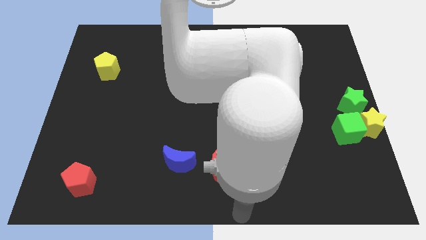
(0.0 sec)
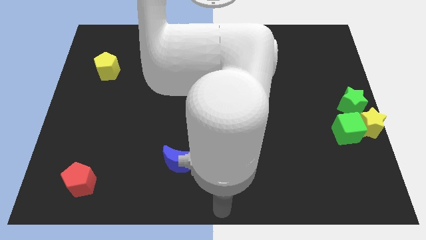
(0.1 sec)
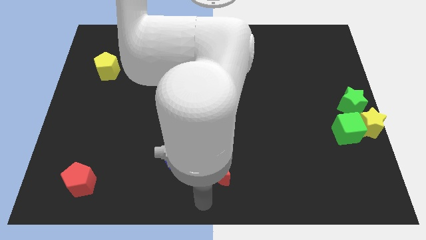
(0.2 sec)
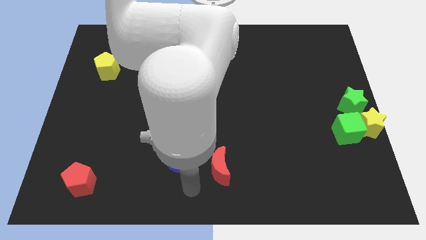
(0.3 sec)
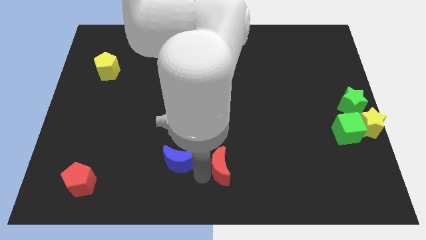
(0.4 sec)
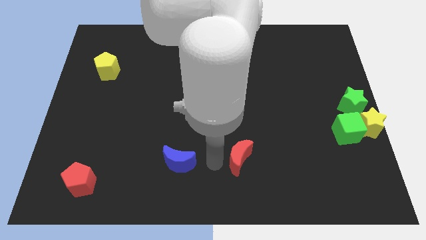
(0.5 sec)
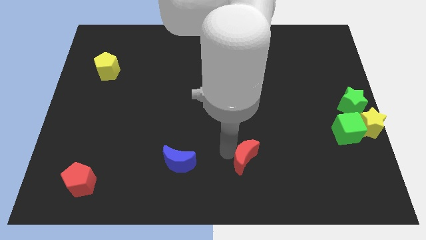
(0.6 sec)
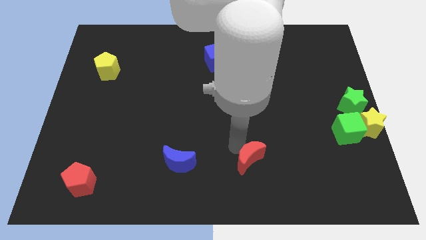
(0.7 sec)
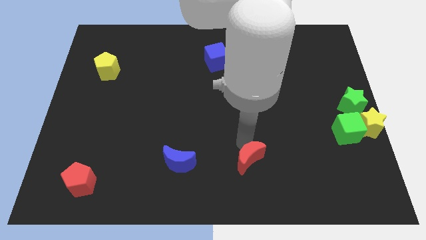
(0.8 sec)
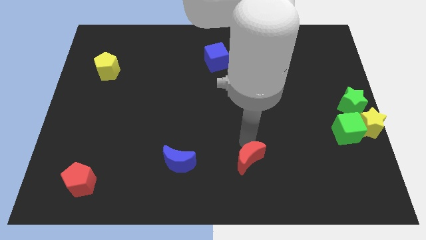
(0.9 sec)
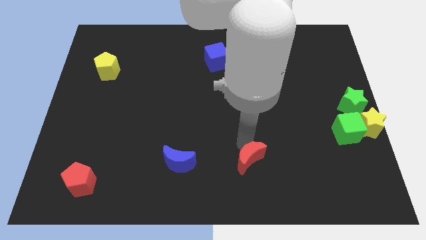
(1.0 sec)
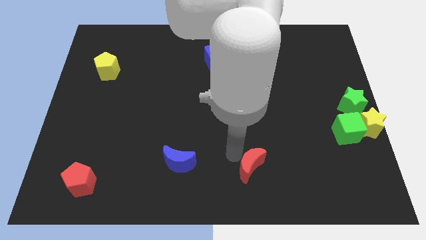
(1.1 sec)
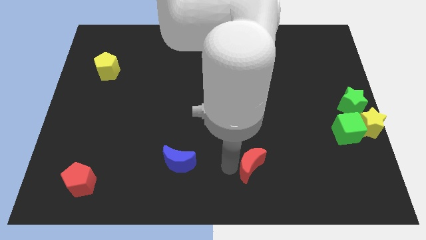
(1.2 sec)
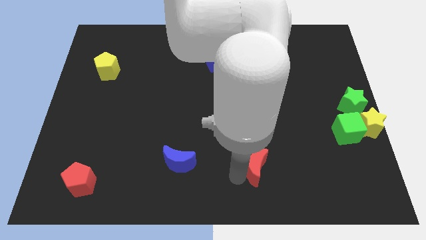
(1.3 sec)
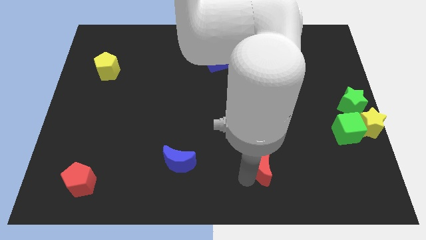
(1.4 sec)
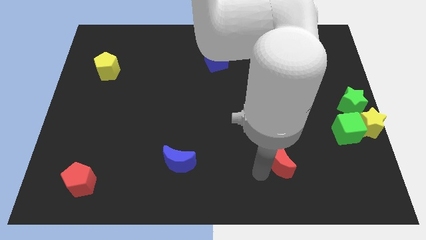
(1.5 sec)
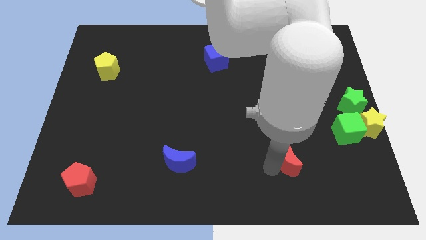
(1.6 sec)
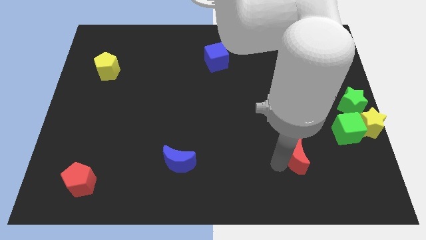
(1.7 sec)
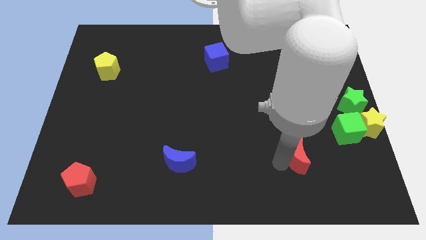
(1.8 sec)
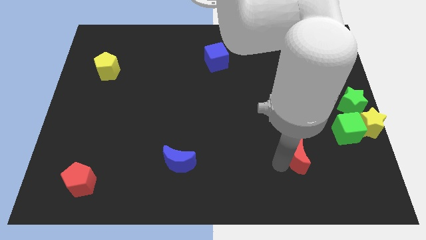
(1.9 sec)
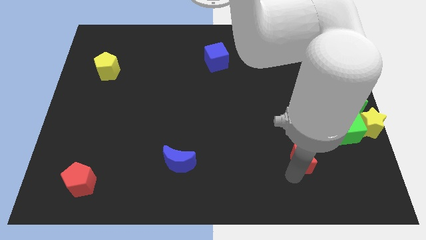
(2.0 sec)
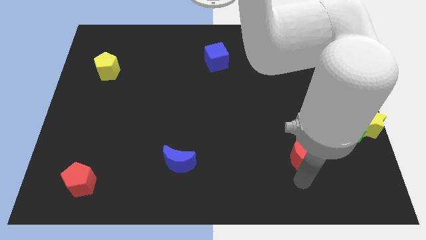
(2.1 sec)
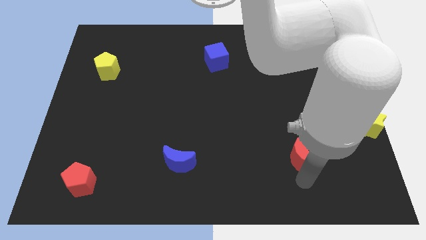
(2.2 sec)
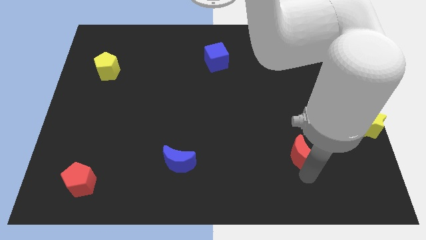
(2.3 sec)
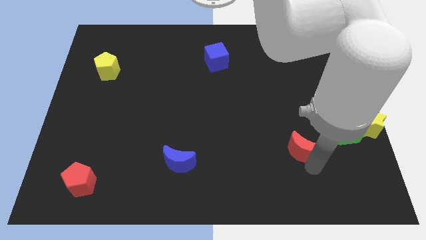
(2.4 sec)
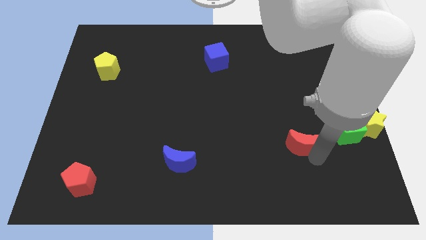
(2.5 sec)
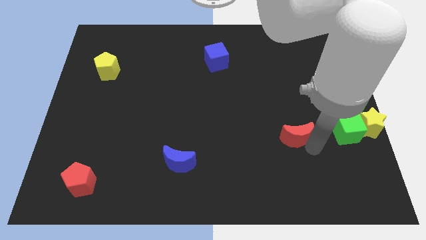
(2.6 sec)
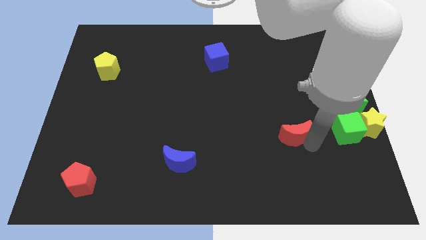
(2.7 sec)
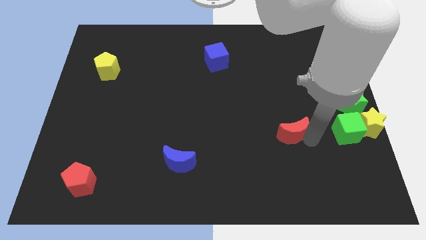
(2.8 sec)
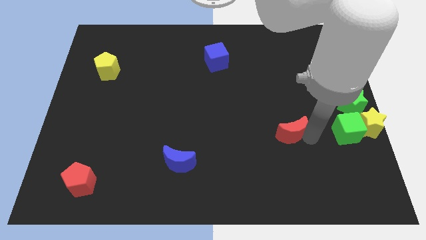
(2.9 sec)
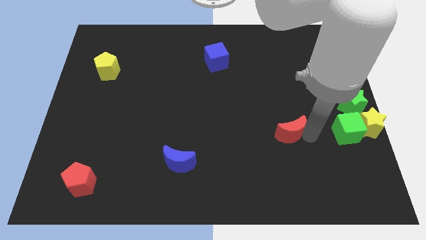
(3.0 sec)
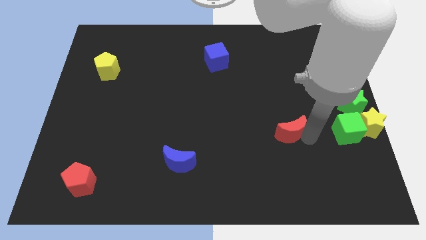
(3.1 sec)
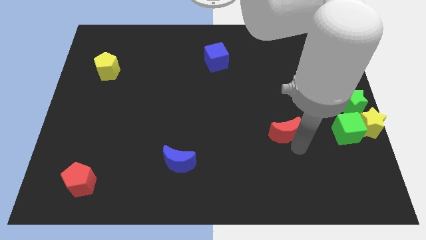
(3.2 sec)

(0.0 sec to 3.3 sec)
move the red moon to the left side of the green cube

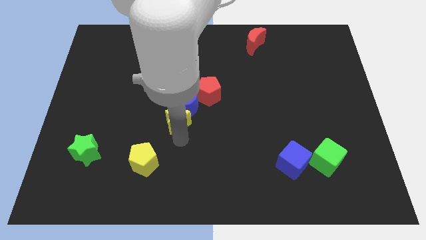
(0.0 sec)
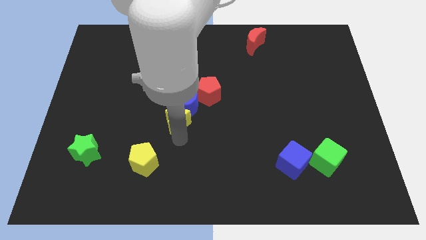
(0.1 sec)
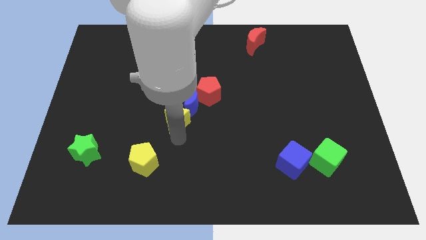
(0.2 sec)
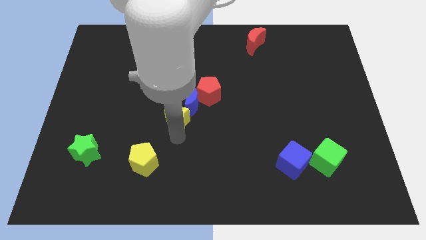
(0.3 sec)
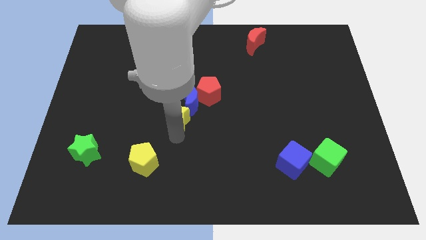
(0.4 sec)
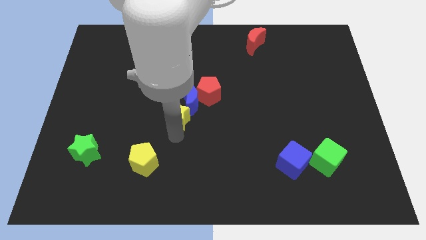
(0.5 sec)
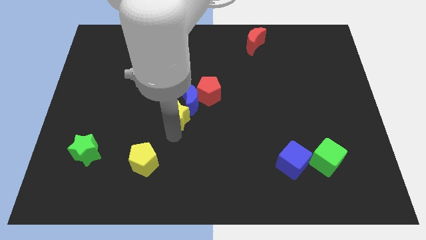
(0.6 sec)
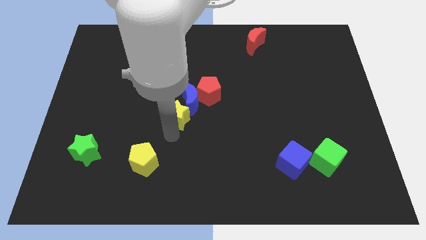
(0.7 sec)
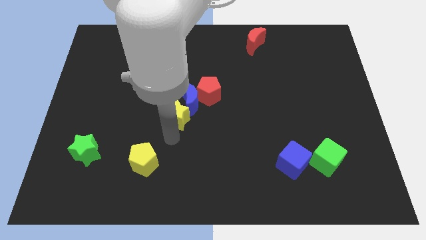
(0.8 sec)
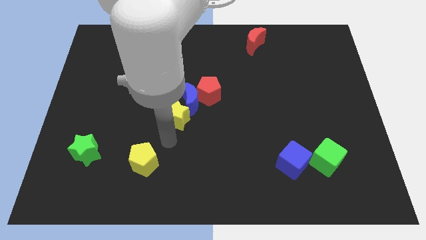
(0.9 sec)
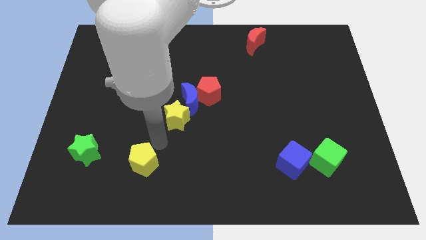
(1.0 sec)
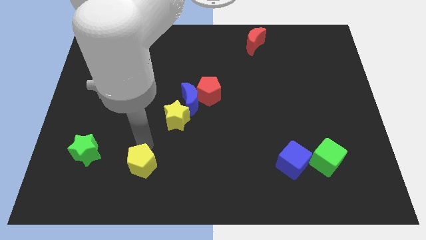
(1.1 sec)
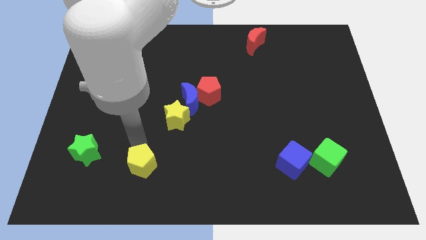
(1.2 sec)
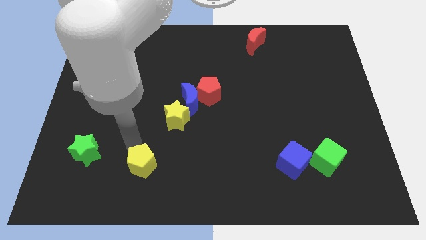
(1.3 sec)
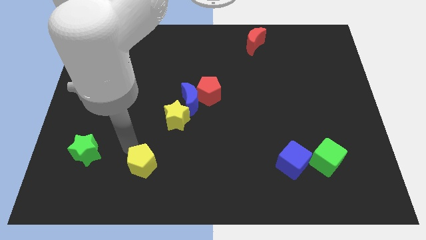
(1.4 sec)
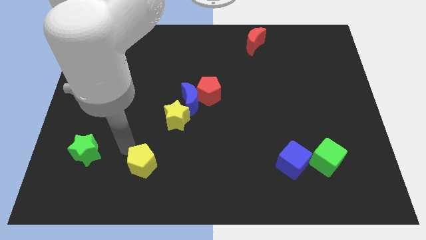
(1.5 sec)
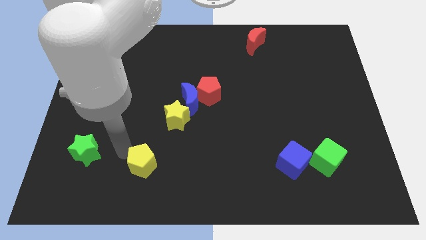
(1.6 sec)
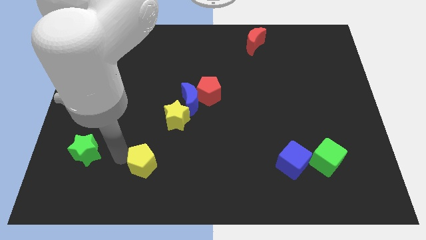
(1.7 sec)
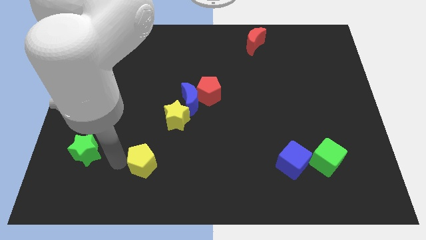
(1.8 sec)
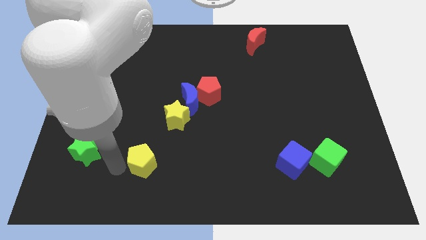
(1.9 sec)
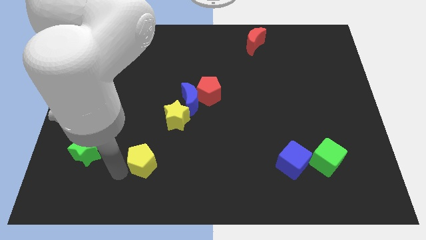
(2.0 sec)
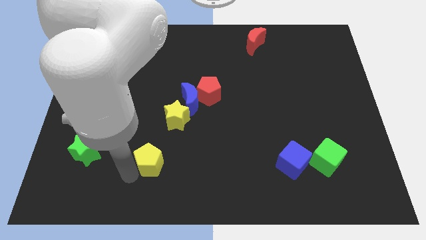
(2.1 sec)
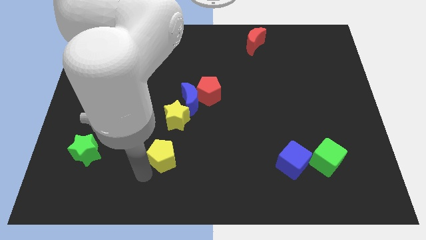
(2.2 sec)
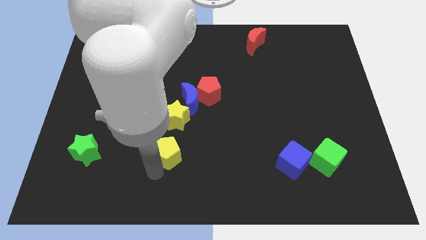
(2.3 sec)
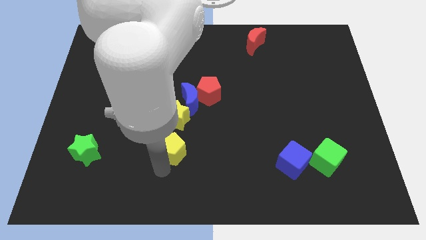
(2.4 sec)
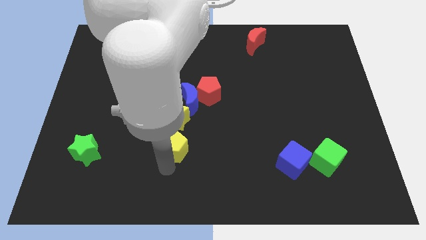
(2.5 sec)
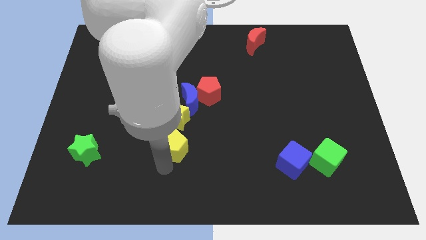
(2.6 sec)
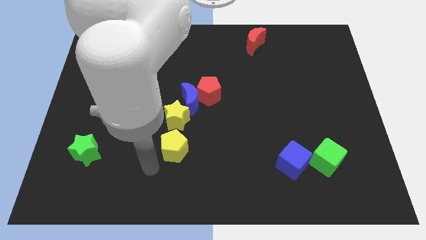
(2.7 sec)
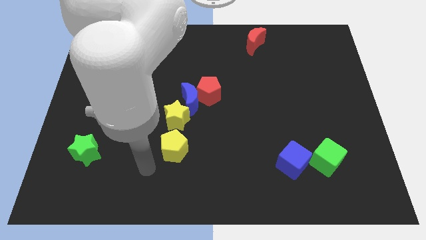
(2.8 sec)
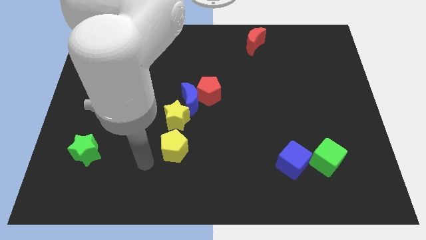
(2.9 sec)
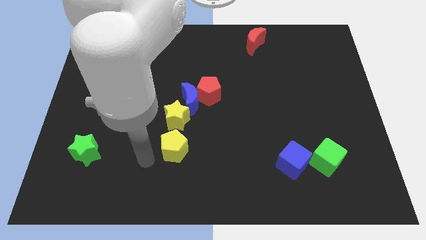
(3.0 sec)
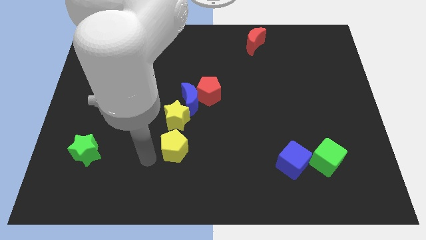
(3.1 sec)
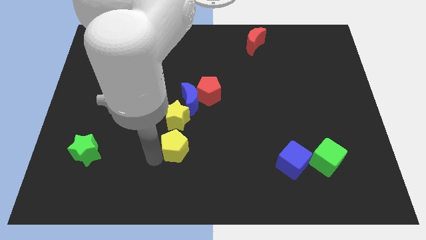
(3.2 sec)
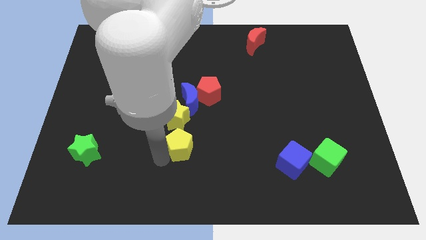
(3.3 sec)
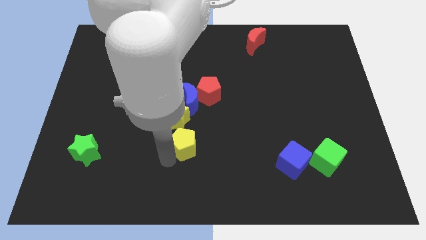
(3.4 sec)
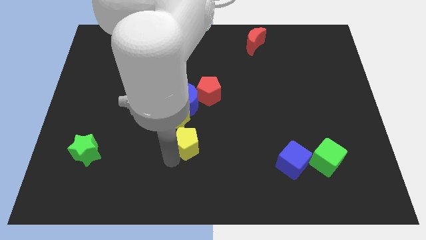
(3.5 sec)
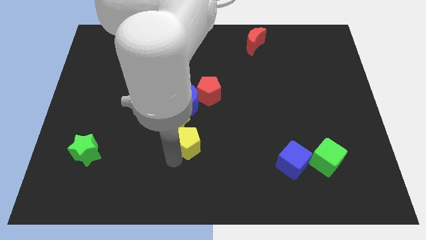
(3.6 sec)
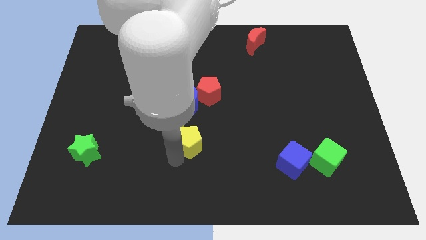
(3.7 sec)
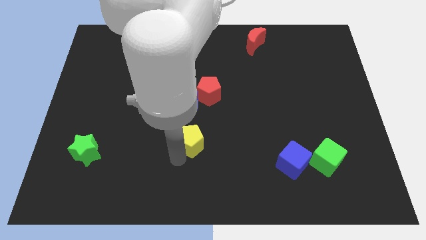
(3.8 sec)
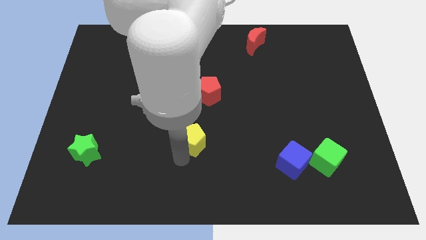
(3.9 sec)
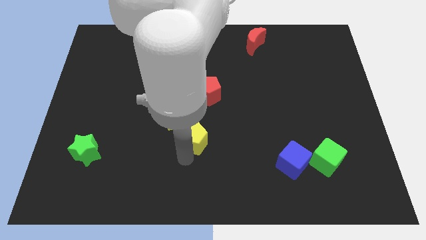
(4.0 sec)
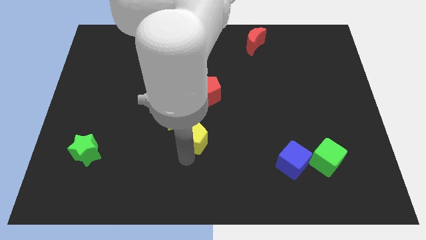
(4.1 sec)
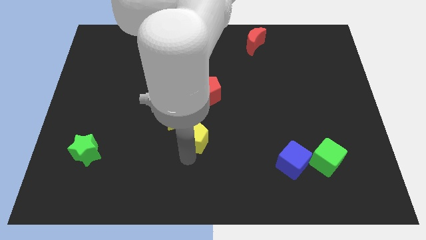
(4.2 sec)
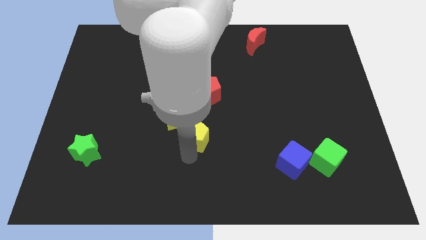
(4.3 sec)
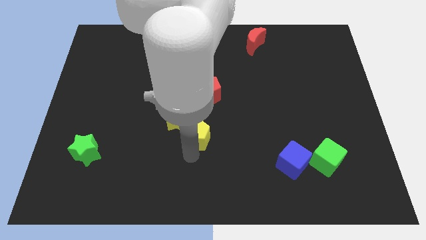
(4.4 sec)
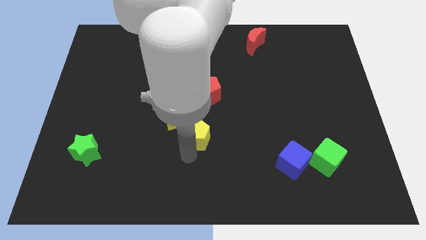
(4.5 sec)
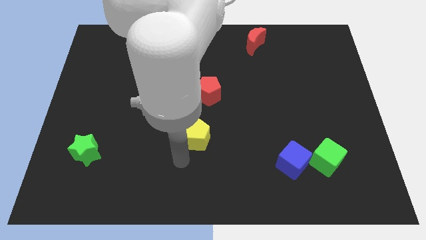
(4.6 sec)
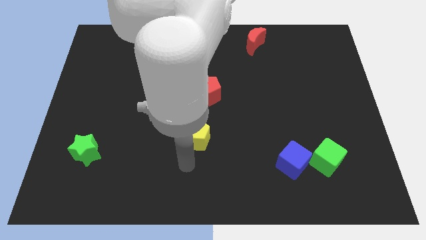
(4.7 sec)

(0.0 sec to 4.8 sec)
move the yellow pentagon to the bottom right of the yellow star

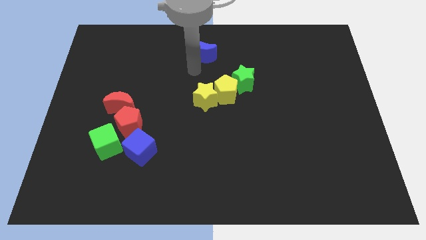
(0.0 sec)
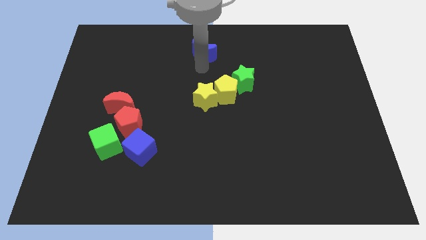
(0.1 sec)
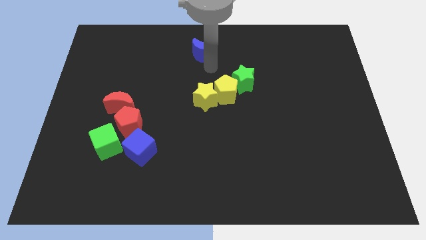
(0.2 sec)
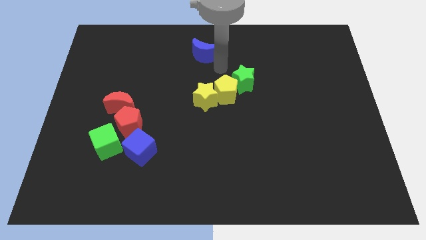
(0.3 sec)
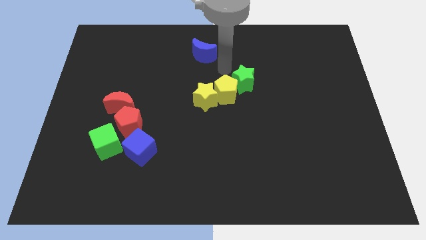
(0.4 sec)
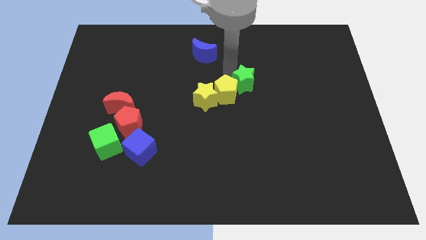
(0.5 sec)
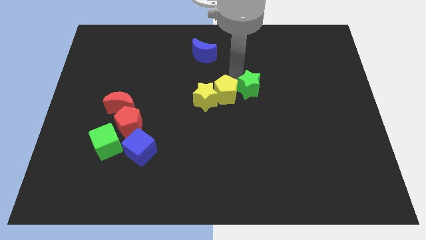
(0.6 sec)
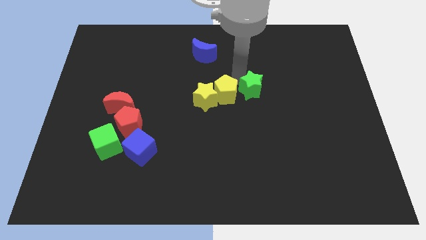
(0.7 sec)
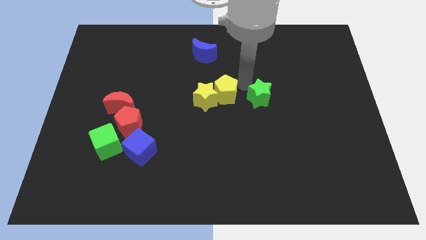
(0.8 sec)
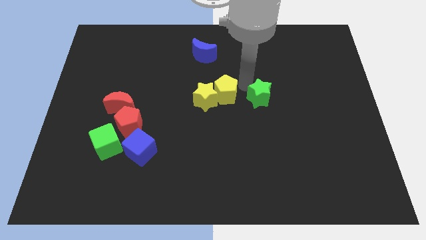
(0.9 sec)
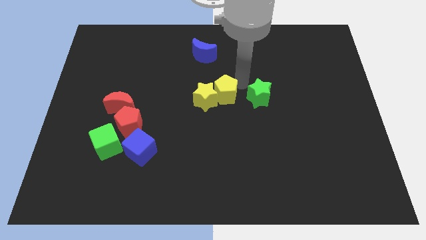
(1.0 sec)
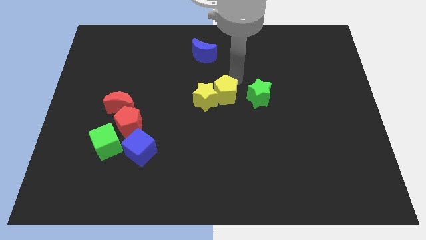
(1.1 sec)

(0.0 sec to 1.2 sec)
push the green star downwards
